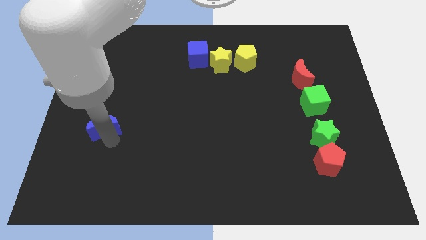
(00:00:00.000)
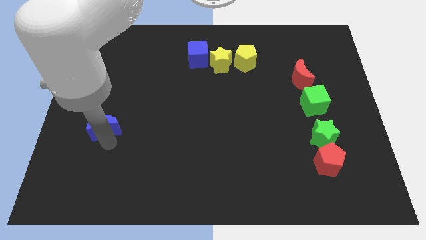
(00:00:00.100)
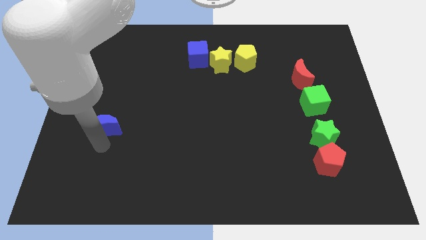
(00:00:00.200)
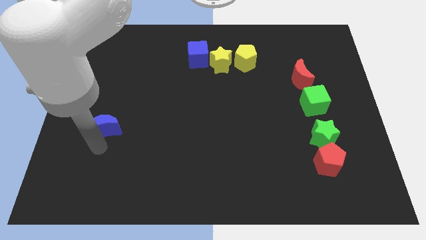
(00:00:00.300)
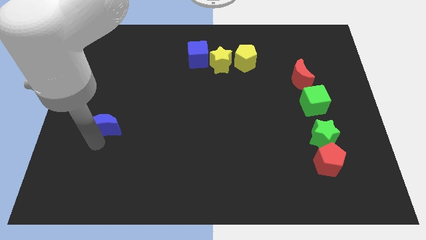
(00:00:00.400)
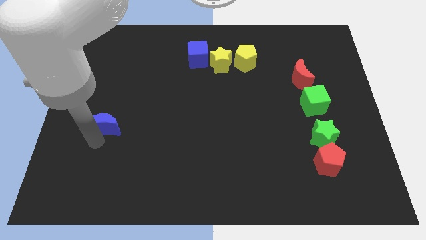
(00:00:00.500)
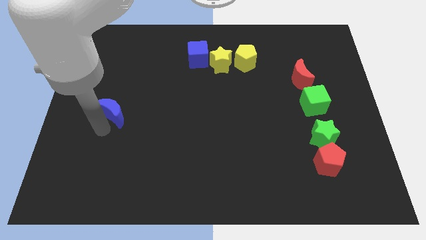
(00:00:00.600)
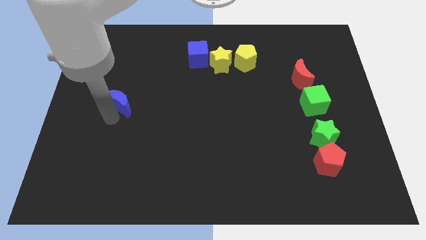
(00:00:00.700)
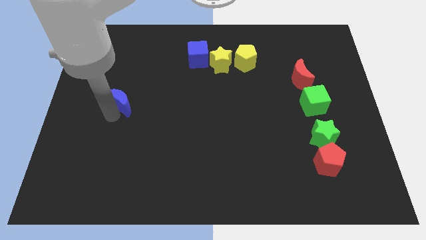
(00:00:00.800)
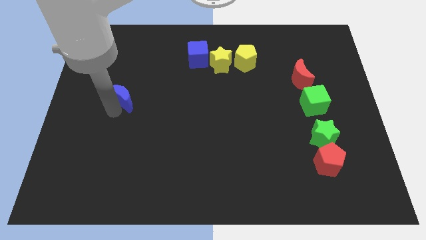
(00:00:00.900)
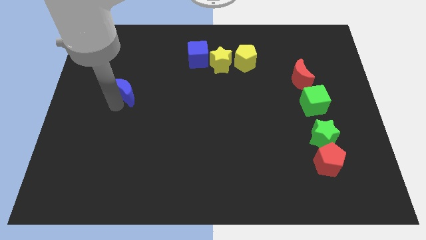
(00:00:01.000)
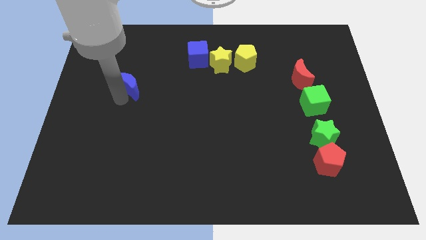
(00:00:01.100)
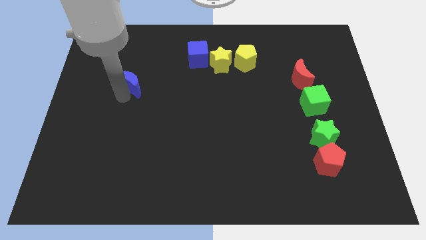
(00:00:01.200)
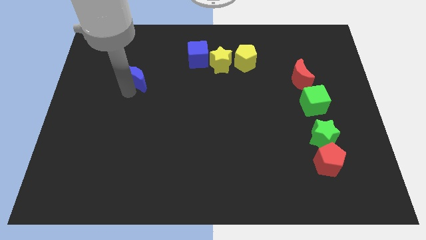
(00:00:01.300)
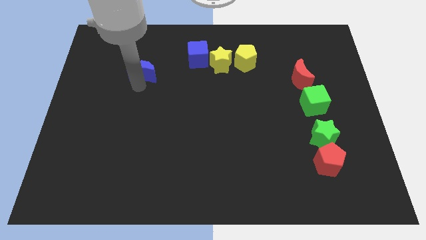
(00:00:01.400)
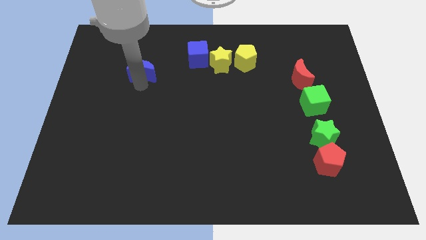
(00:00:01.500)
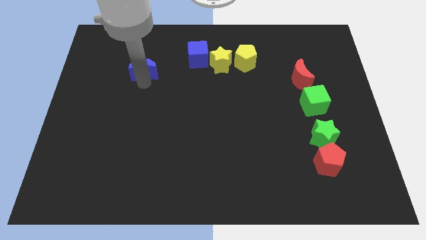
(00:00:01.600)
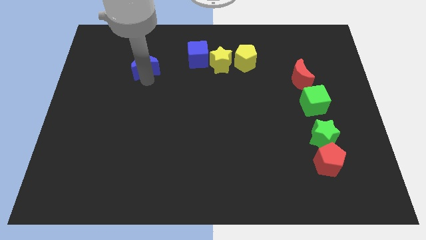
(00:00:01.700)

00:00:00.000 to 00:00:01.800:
move blue crescent towards top side of the board

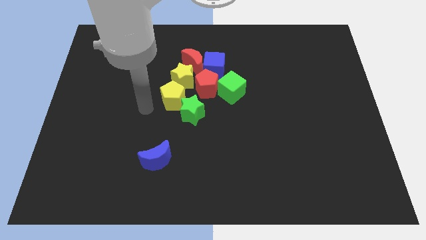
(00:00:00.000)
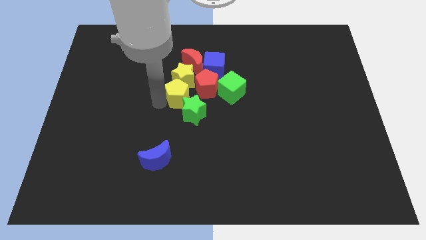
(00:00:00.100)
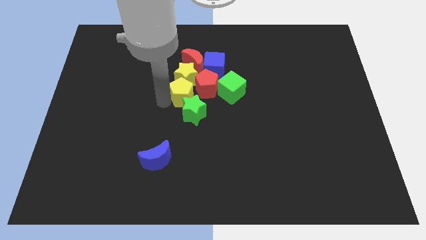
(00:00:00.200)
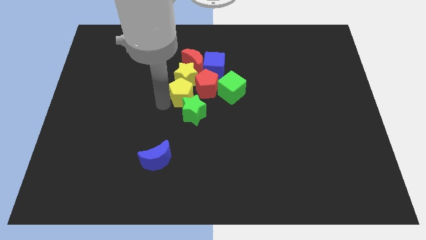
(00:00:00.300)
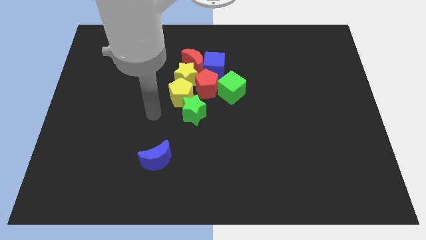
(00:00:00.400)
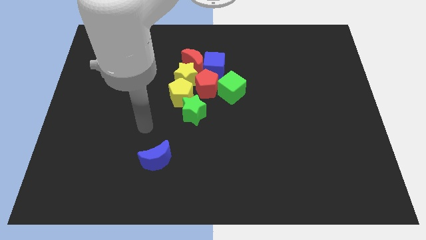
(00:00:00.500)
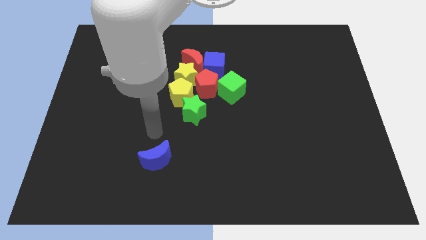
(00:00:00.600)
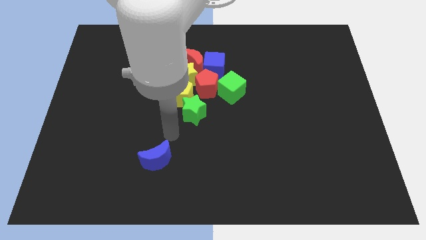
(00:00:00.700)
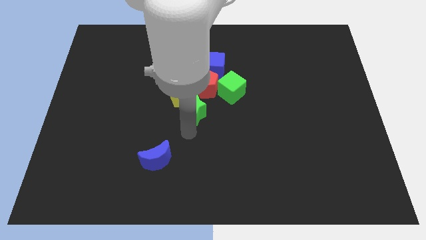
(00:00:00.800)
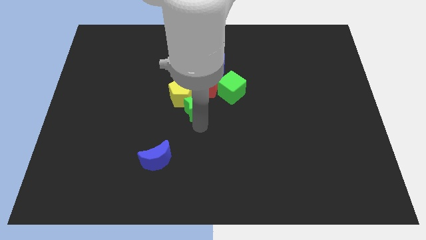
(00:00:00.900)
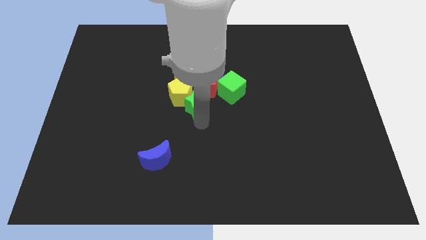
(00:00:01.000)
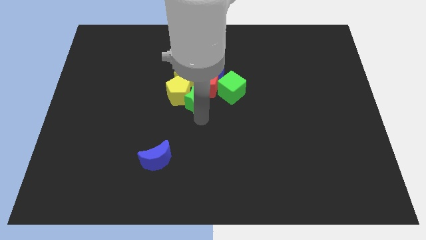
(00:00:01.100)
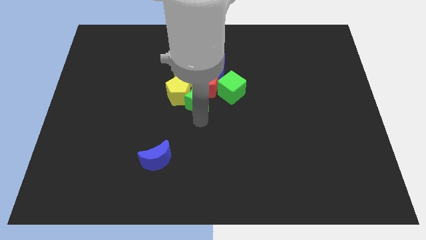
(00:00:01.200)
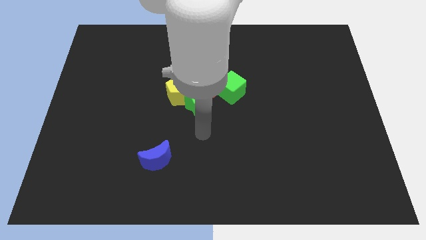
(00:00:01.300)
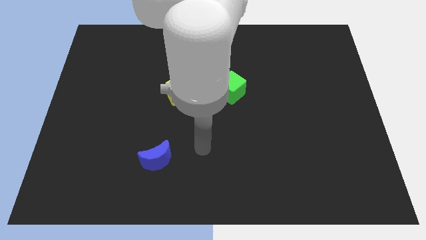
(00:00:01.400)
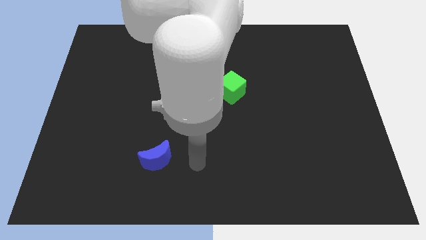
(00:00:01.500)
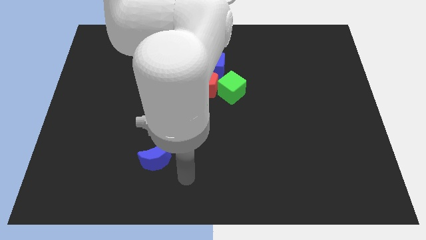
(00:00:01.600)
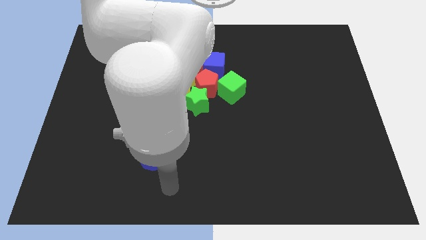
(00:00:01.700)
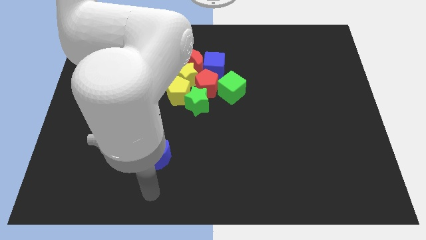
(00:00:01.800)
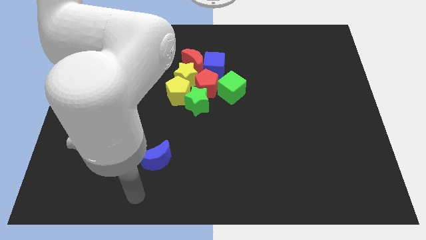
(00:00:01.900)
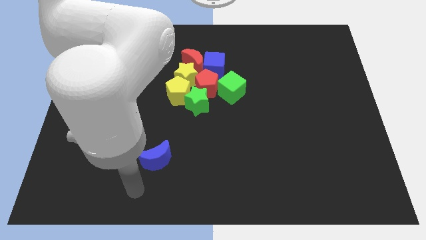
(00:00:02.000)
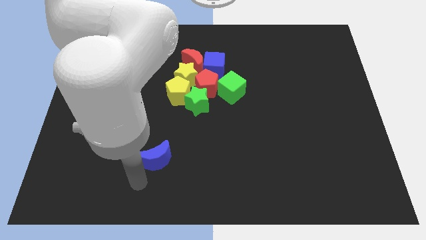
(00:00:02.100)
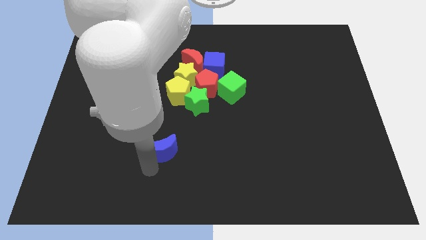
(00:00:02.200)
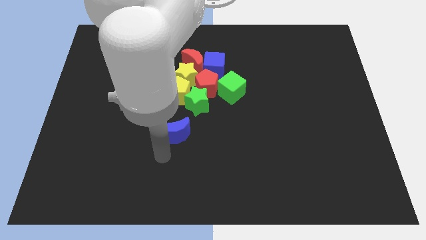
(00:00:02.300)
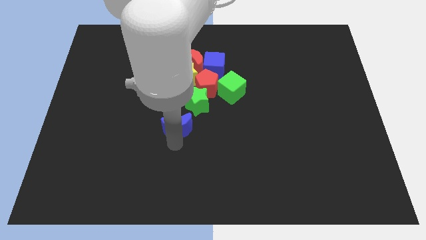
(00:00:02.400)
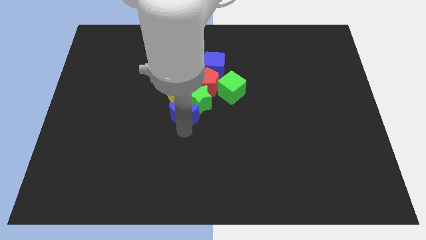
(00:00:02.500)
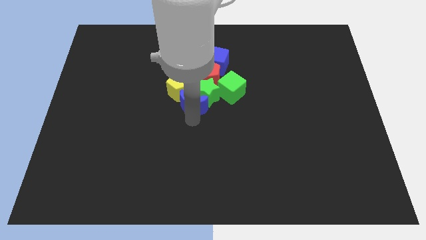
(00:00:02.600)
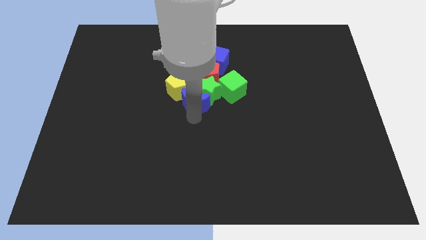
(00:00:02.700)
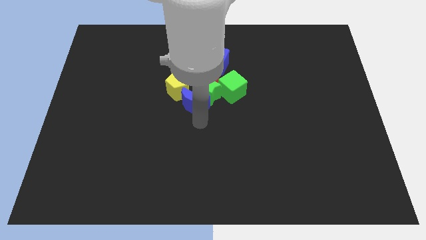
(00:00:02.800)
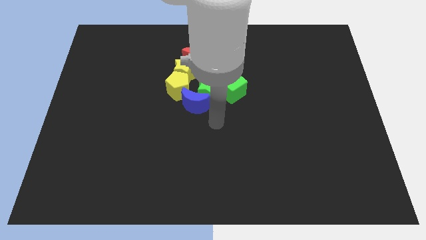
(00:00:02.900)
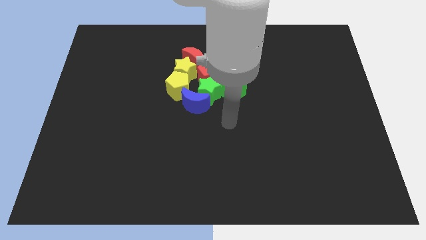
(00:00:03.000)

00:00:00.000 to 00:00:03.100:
move the blue crescent into the group of blocks

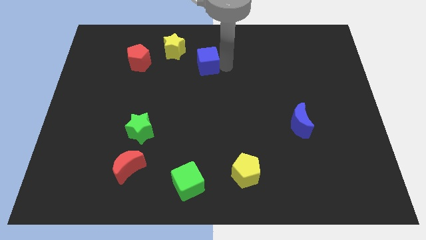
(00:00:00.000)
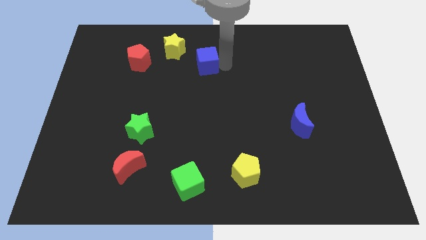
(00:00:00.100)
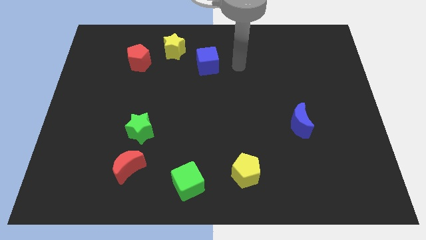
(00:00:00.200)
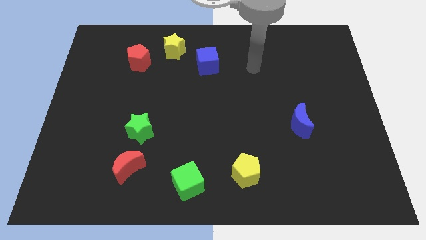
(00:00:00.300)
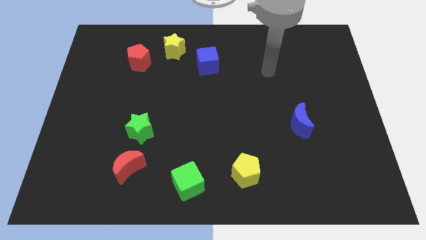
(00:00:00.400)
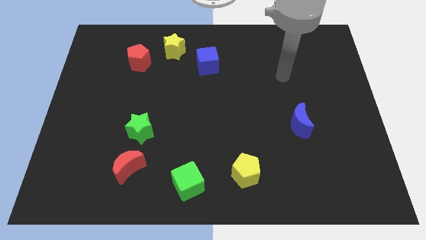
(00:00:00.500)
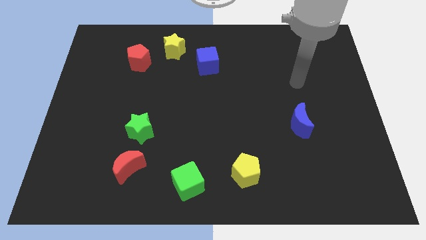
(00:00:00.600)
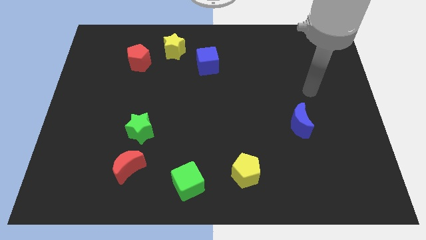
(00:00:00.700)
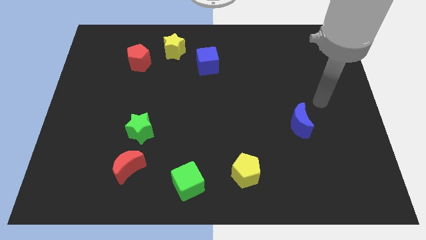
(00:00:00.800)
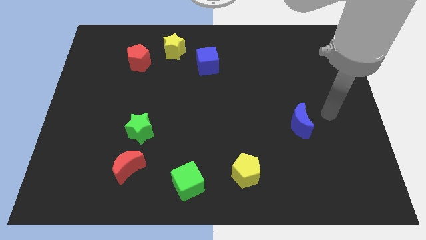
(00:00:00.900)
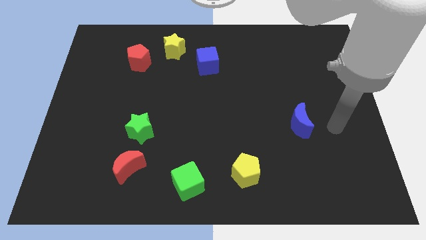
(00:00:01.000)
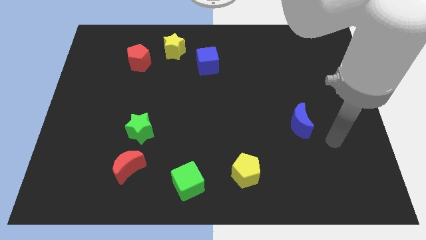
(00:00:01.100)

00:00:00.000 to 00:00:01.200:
move your arm away from blue cube

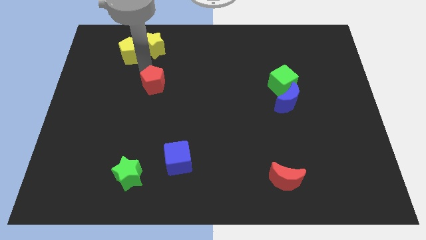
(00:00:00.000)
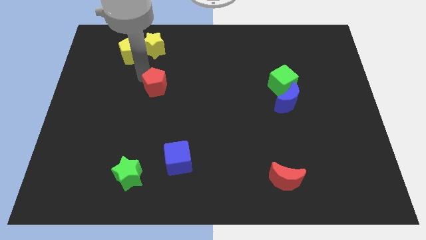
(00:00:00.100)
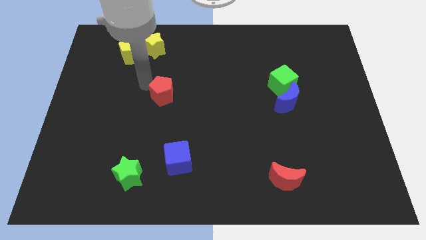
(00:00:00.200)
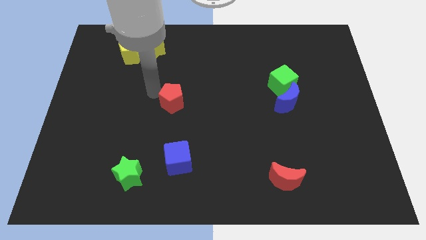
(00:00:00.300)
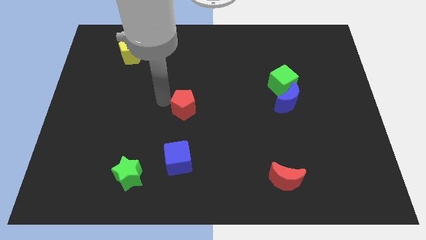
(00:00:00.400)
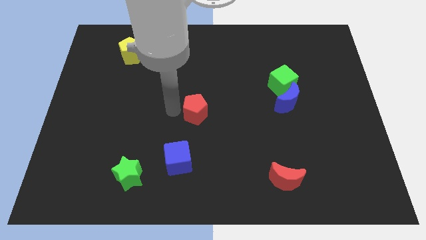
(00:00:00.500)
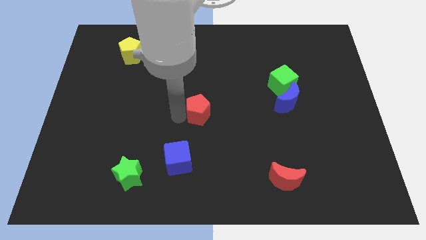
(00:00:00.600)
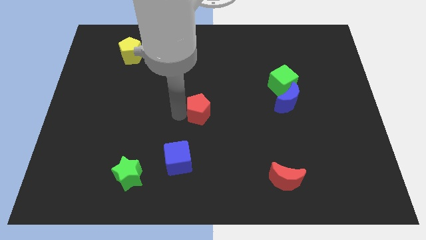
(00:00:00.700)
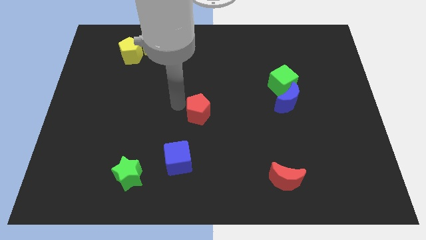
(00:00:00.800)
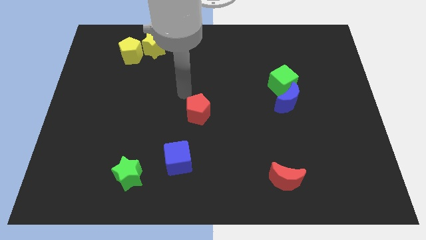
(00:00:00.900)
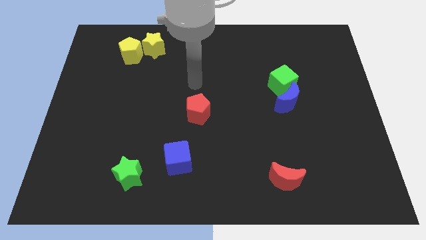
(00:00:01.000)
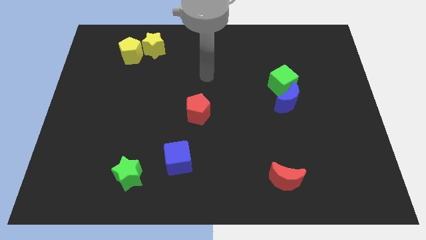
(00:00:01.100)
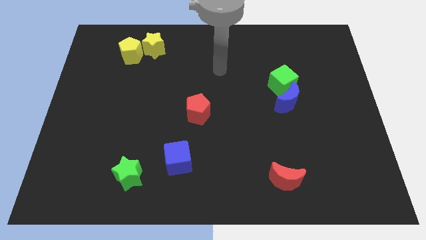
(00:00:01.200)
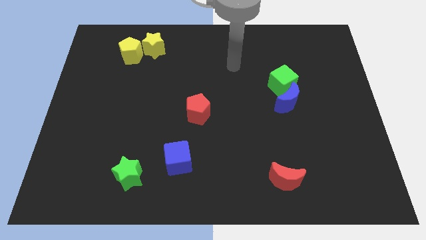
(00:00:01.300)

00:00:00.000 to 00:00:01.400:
move the red pentagon towards the center of the board

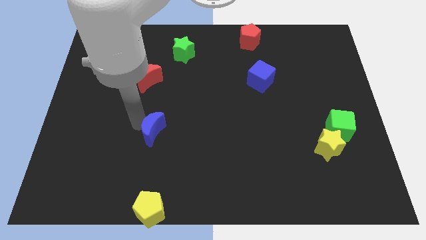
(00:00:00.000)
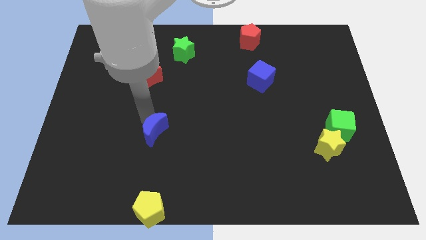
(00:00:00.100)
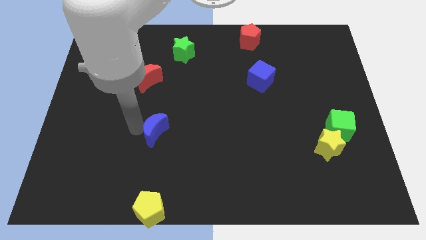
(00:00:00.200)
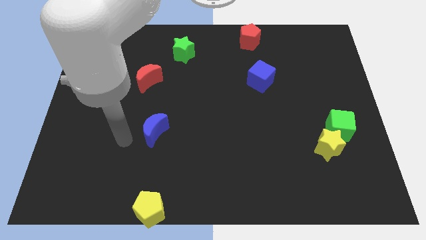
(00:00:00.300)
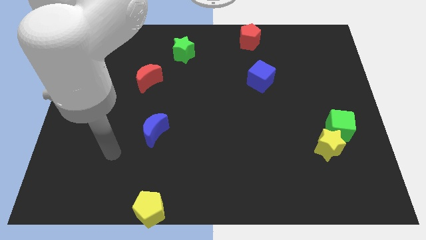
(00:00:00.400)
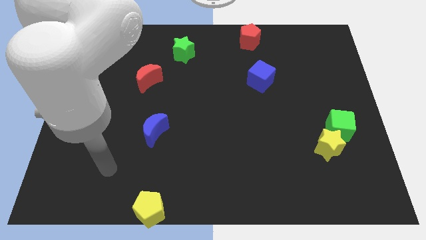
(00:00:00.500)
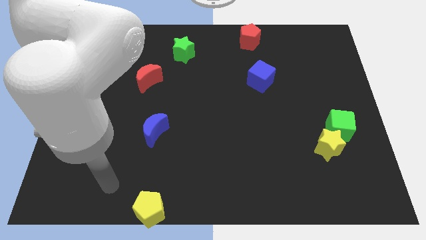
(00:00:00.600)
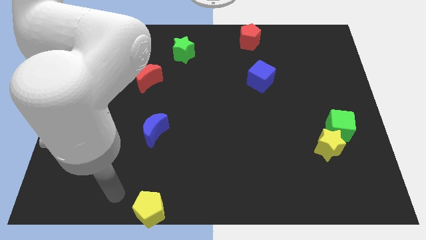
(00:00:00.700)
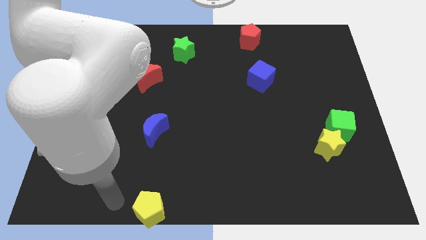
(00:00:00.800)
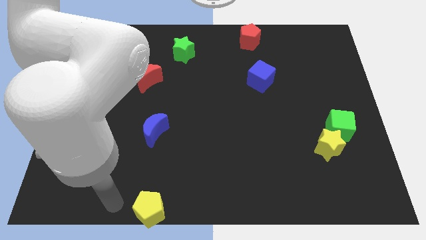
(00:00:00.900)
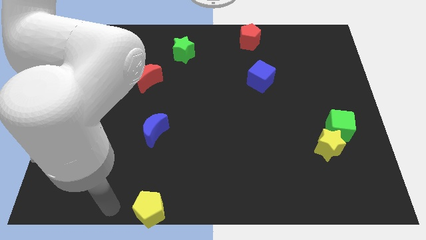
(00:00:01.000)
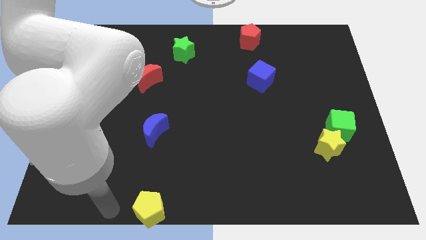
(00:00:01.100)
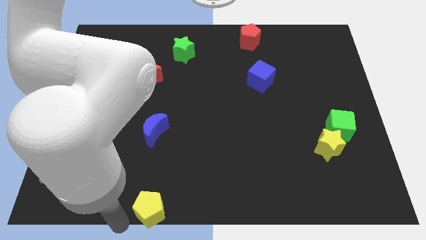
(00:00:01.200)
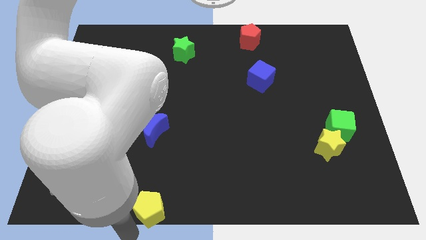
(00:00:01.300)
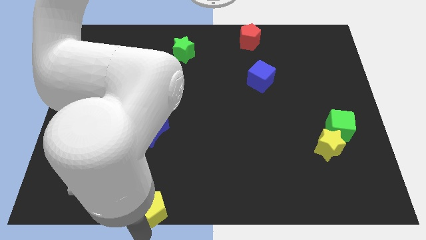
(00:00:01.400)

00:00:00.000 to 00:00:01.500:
place the arm down to the yellow pentagon
